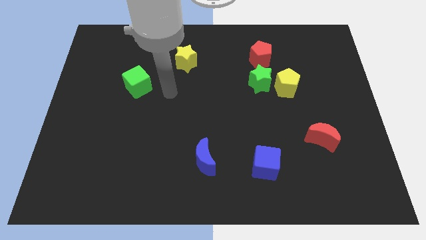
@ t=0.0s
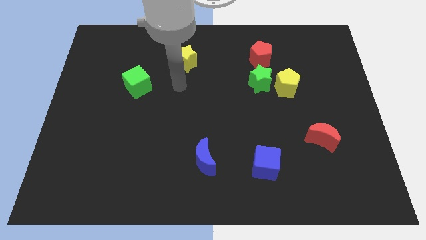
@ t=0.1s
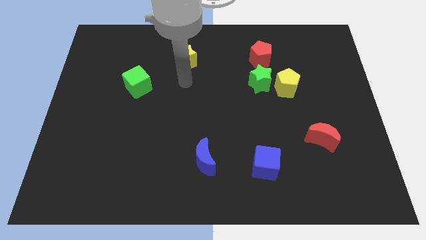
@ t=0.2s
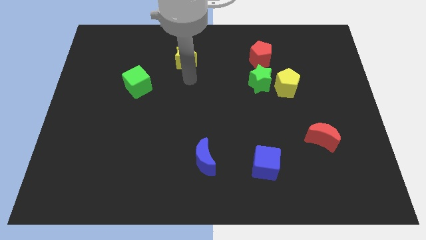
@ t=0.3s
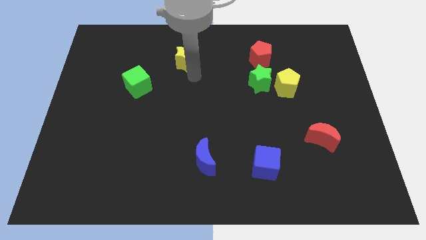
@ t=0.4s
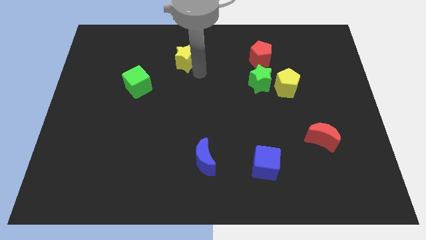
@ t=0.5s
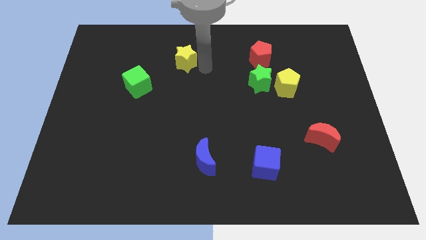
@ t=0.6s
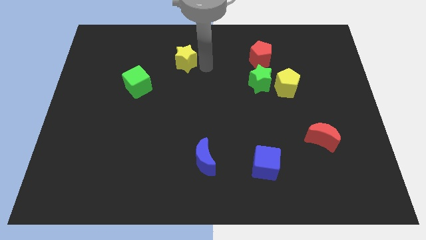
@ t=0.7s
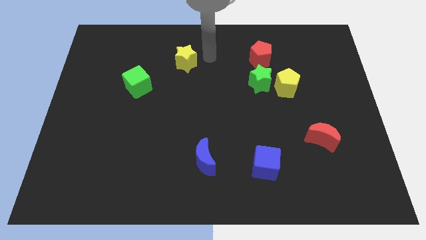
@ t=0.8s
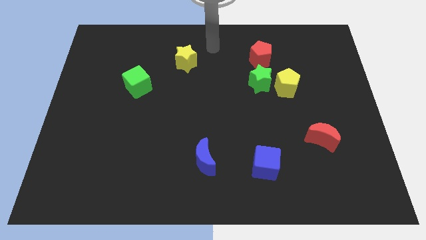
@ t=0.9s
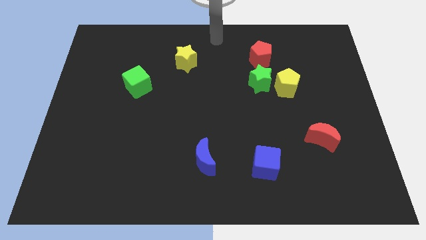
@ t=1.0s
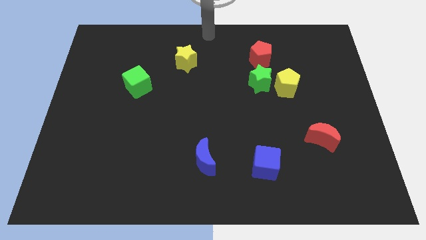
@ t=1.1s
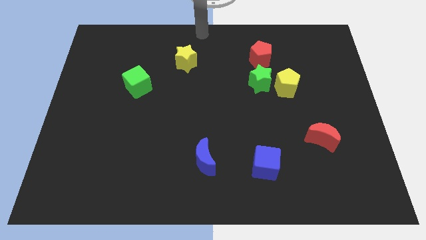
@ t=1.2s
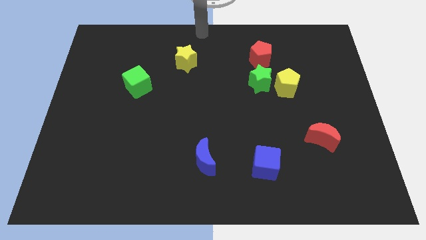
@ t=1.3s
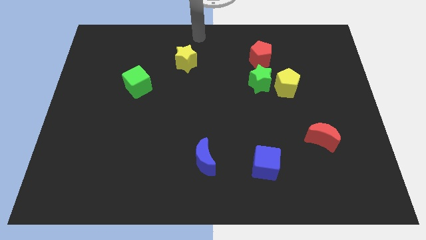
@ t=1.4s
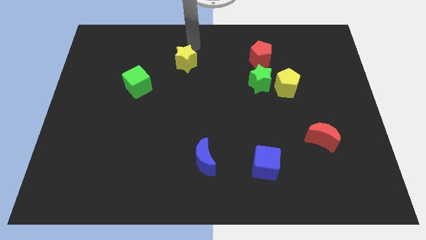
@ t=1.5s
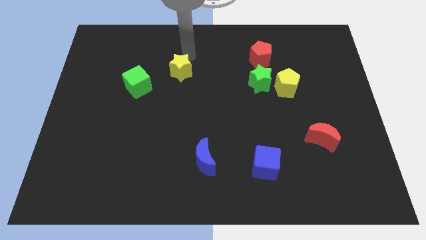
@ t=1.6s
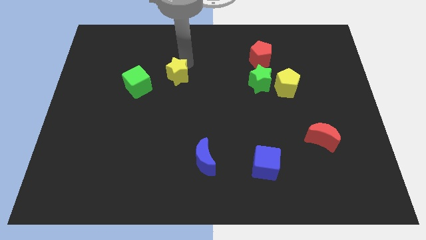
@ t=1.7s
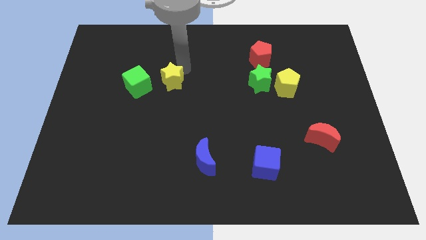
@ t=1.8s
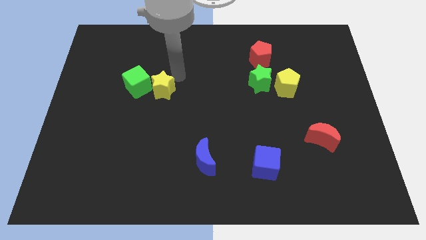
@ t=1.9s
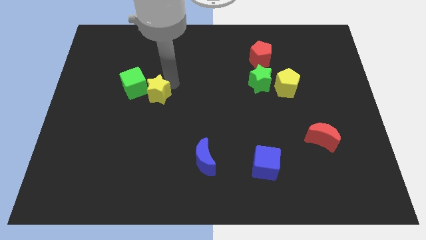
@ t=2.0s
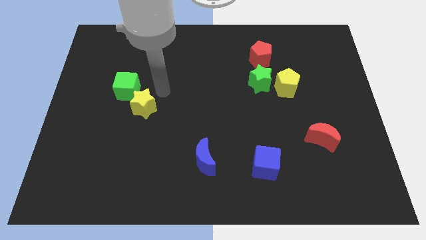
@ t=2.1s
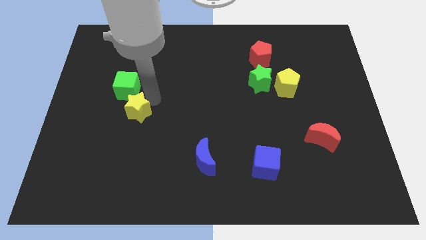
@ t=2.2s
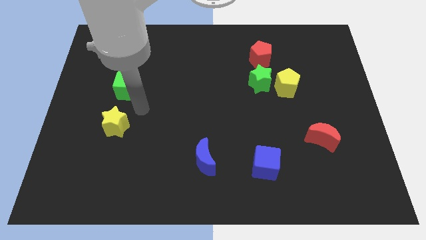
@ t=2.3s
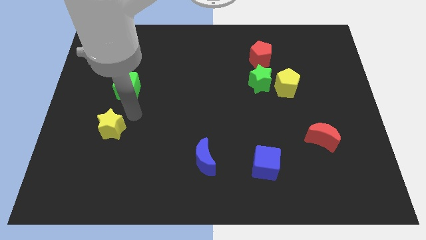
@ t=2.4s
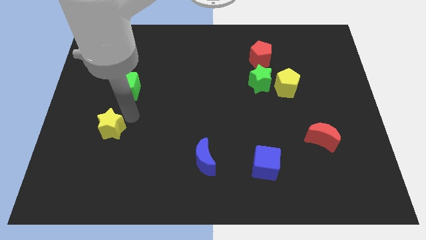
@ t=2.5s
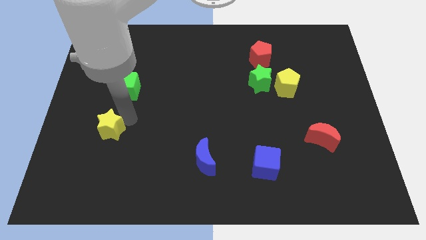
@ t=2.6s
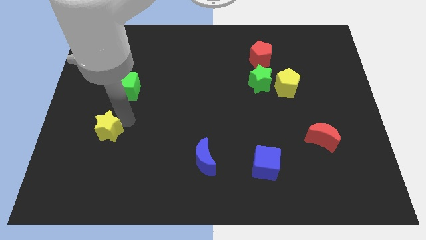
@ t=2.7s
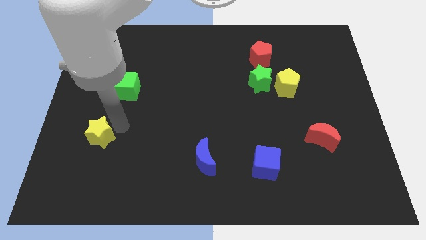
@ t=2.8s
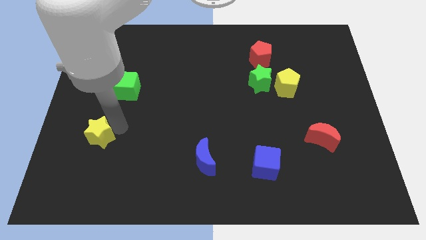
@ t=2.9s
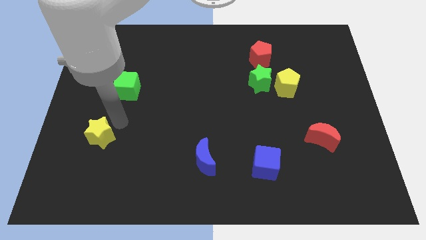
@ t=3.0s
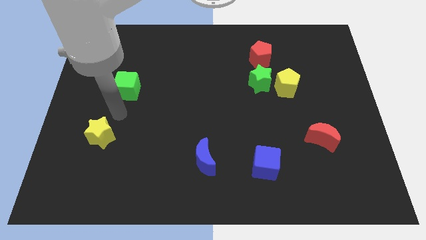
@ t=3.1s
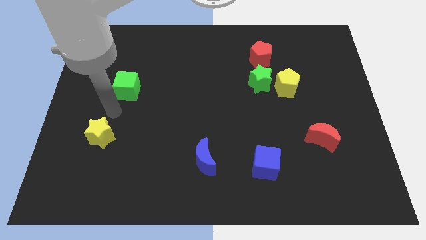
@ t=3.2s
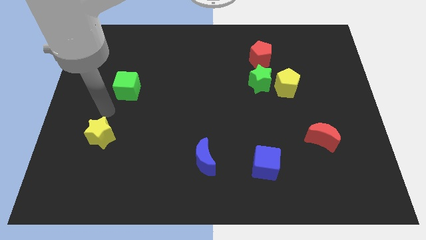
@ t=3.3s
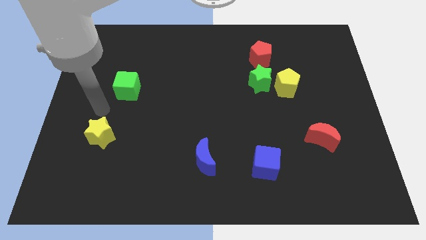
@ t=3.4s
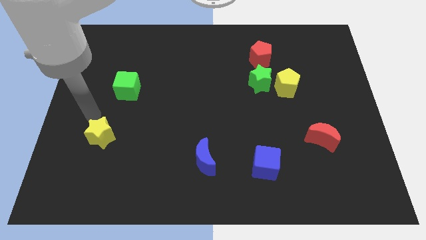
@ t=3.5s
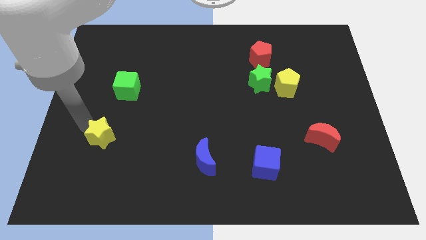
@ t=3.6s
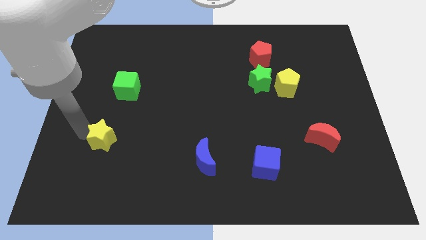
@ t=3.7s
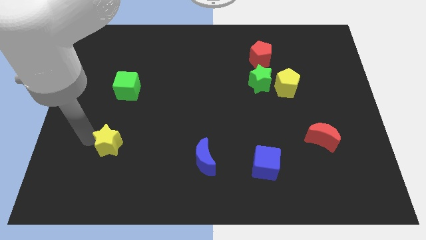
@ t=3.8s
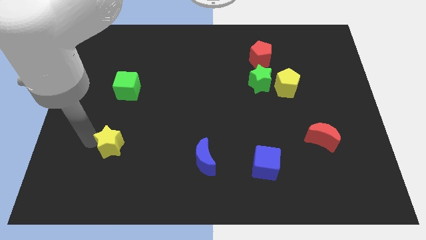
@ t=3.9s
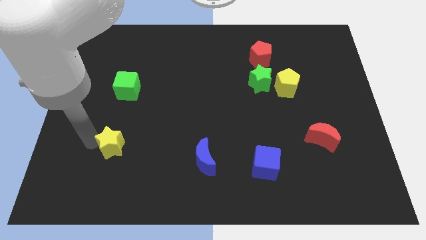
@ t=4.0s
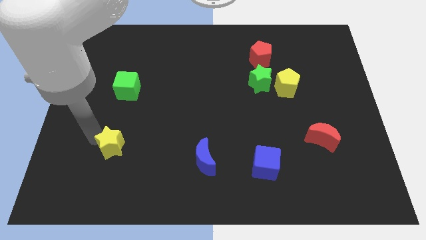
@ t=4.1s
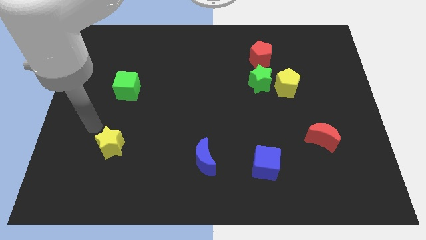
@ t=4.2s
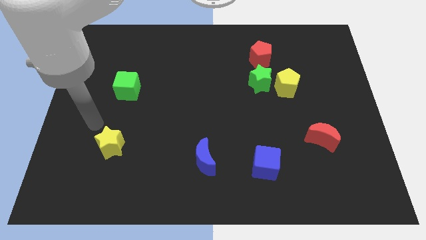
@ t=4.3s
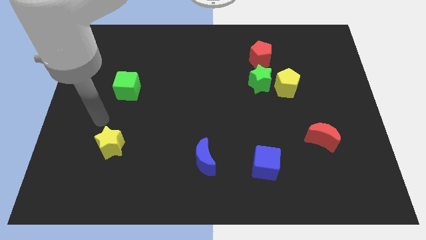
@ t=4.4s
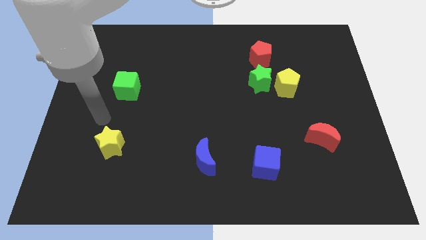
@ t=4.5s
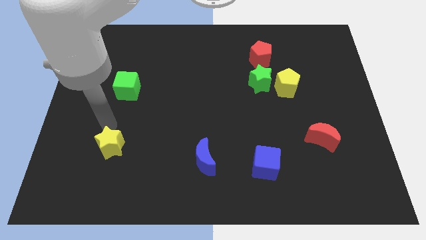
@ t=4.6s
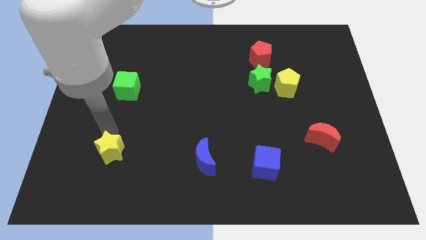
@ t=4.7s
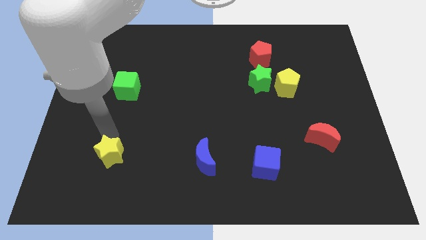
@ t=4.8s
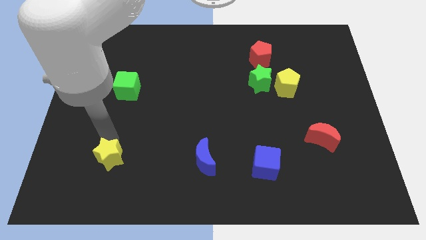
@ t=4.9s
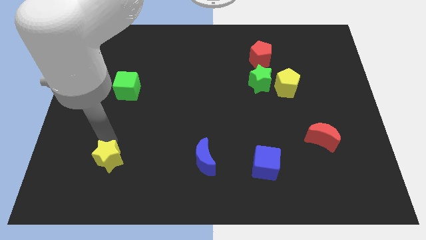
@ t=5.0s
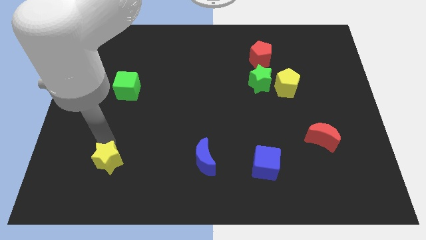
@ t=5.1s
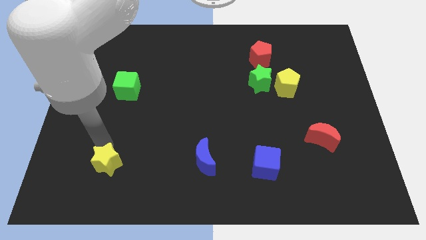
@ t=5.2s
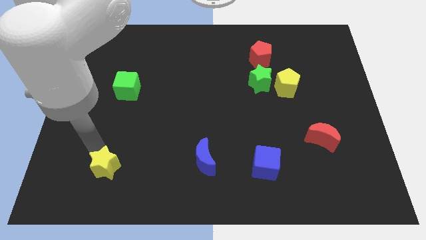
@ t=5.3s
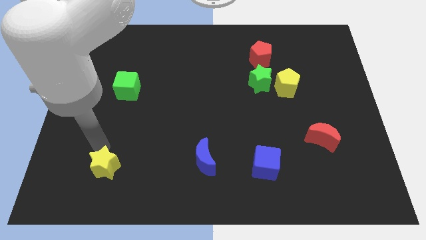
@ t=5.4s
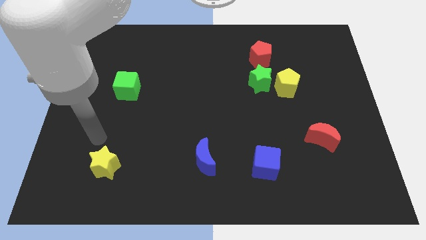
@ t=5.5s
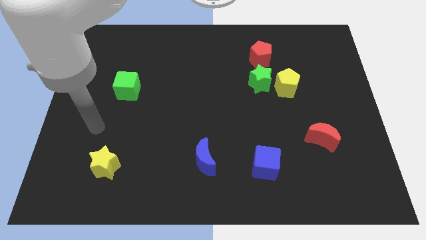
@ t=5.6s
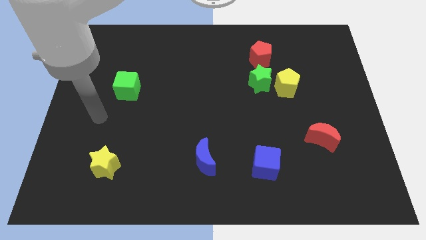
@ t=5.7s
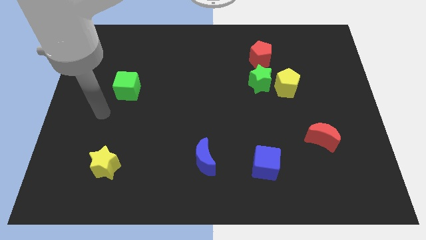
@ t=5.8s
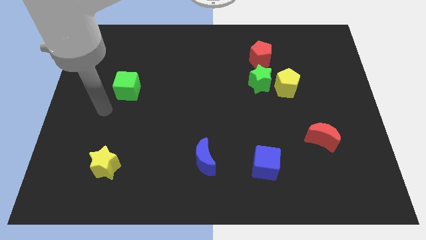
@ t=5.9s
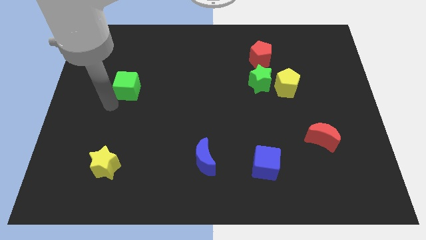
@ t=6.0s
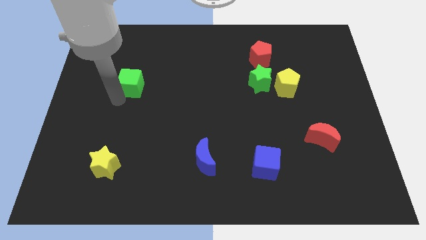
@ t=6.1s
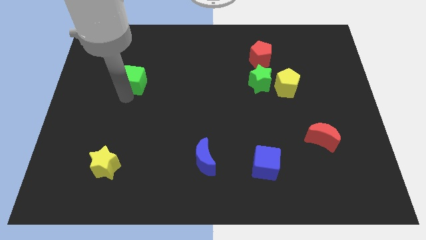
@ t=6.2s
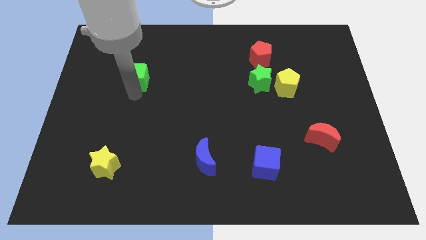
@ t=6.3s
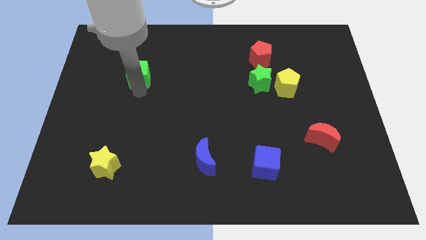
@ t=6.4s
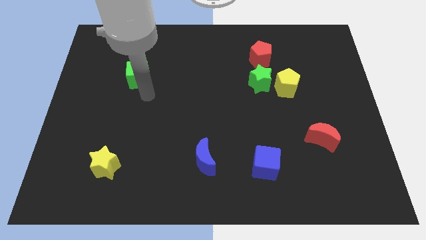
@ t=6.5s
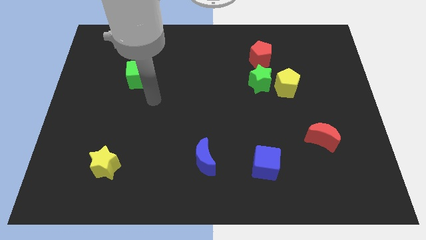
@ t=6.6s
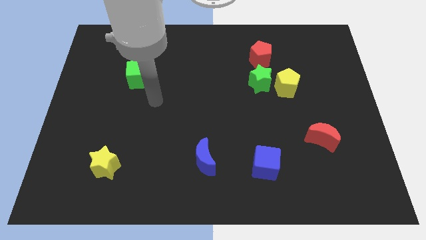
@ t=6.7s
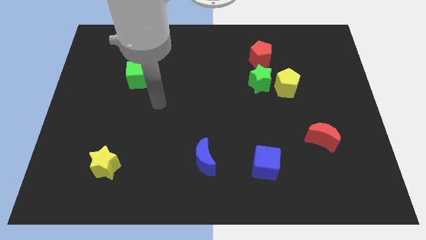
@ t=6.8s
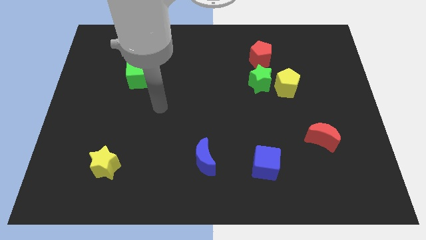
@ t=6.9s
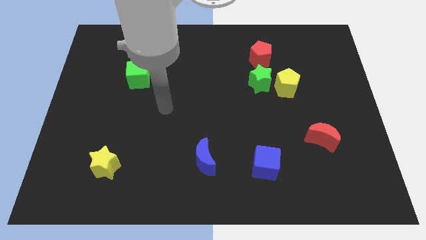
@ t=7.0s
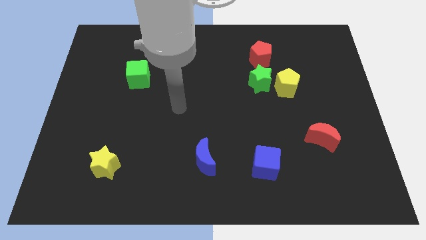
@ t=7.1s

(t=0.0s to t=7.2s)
push the yellow star towards the bottom left of the board

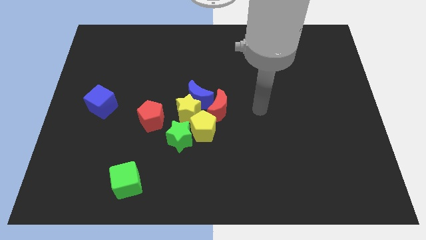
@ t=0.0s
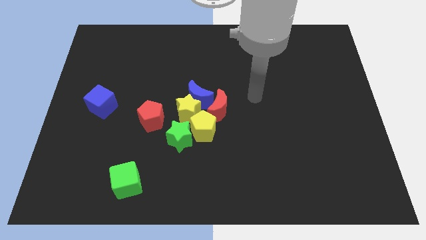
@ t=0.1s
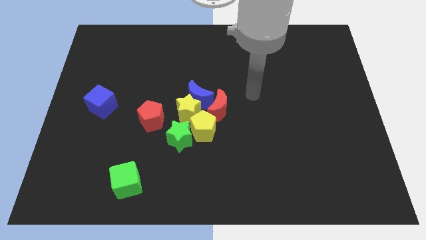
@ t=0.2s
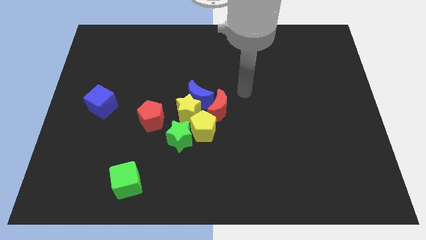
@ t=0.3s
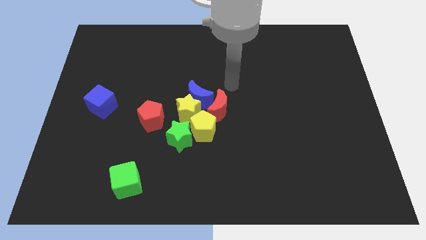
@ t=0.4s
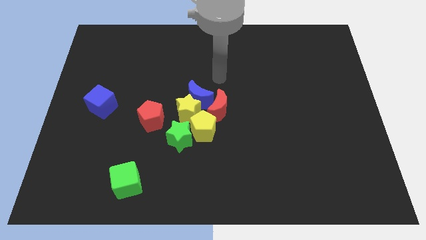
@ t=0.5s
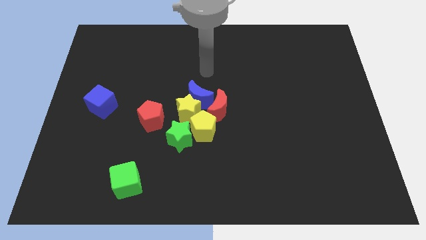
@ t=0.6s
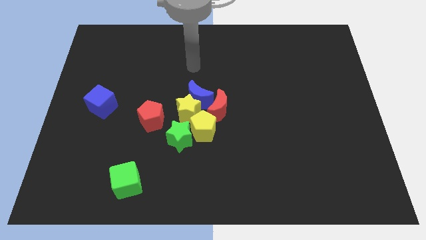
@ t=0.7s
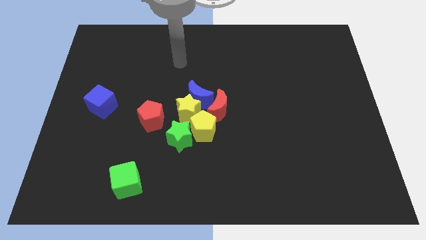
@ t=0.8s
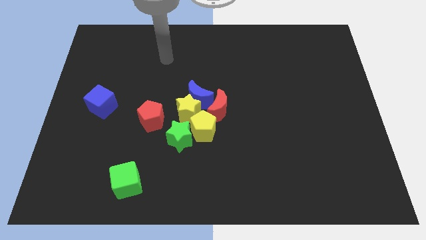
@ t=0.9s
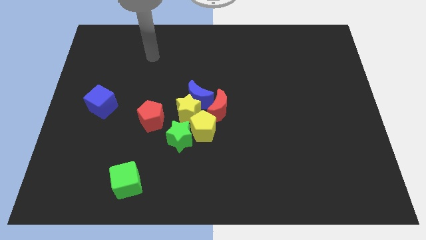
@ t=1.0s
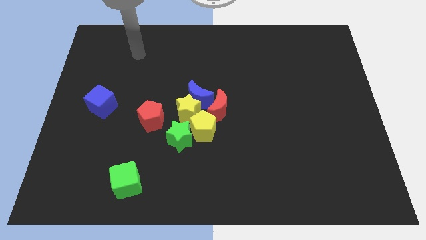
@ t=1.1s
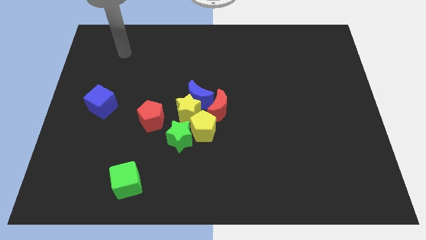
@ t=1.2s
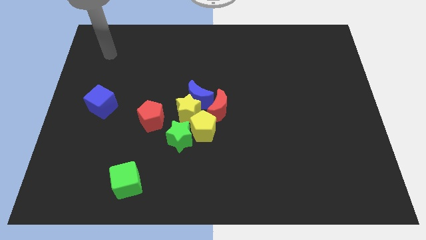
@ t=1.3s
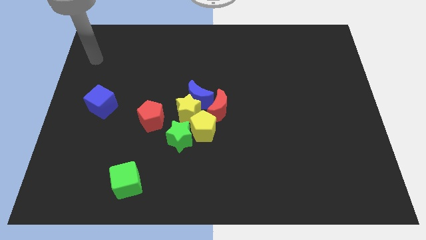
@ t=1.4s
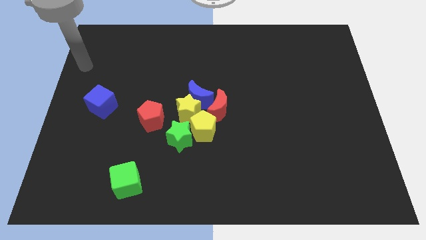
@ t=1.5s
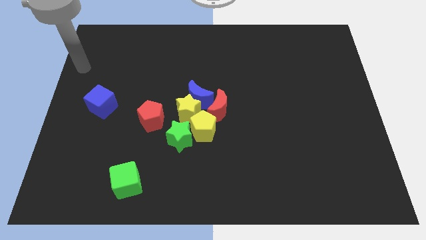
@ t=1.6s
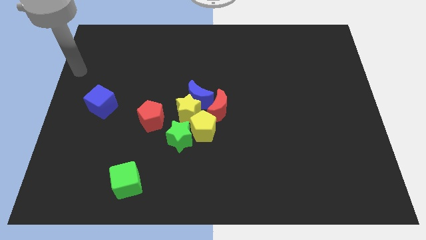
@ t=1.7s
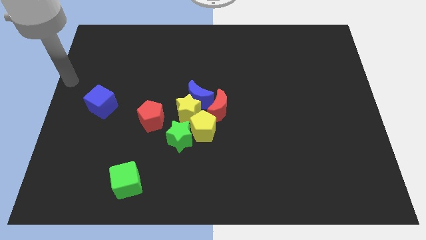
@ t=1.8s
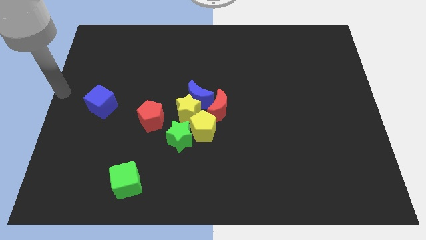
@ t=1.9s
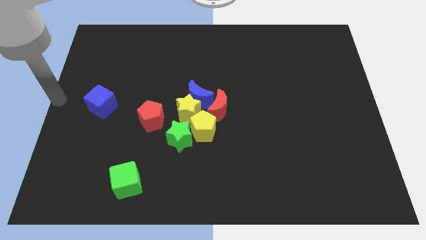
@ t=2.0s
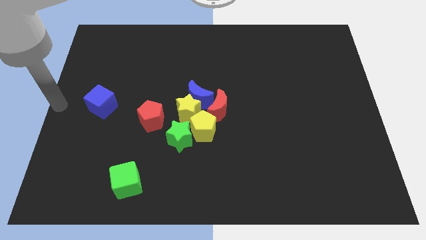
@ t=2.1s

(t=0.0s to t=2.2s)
point your arm to the left of the blue cube
